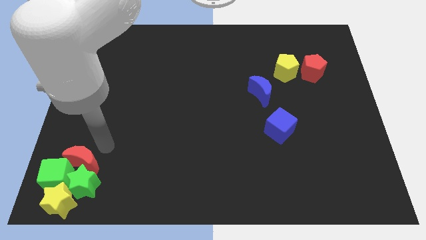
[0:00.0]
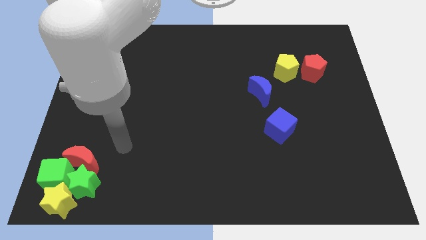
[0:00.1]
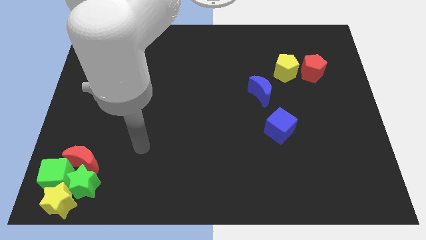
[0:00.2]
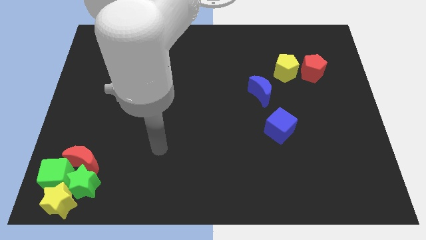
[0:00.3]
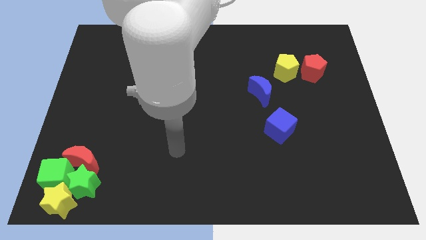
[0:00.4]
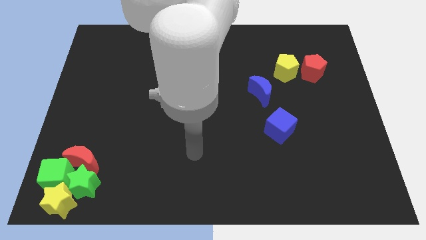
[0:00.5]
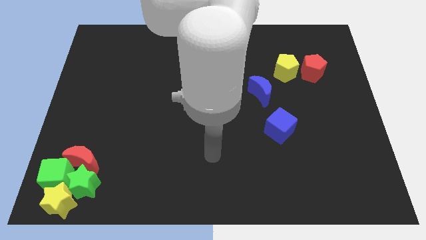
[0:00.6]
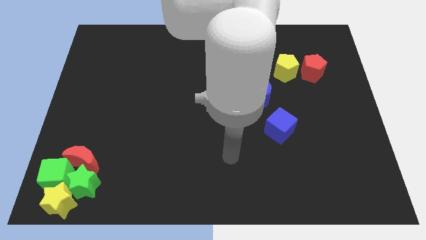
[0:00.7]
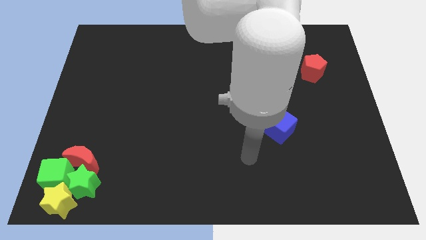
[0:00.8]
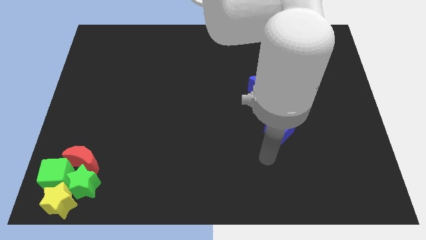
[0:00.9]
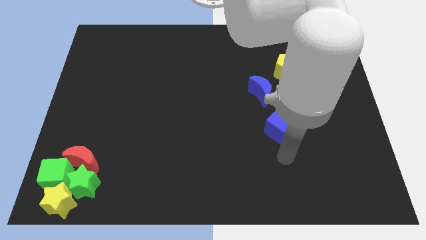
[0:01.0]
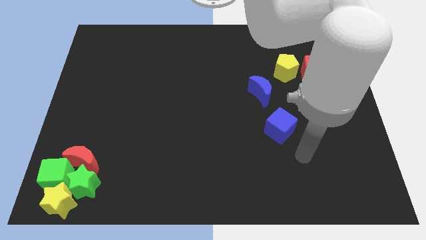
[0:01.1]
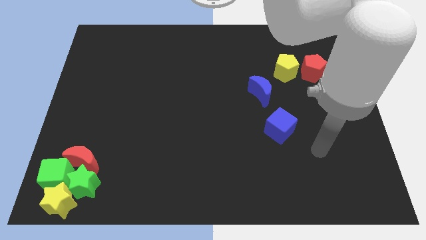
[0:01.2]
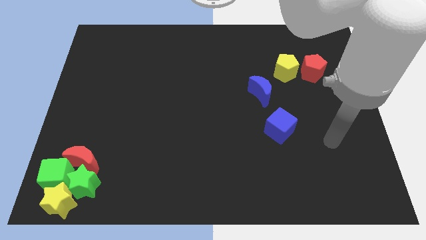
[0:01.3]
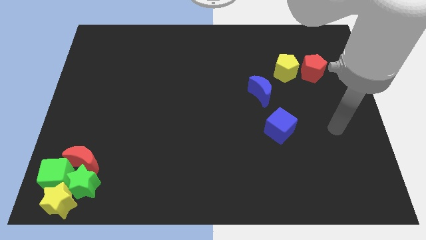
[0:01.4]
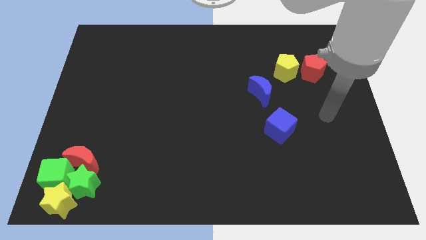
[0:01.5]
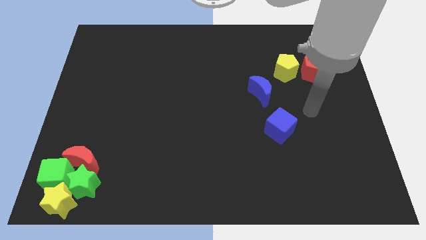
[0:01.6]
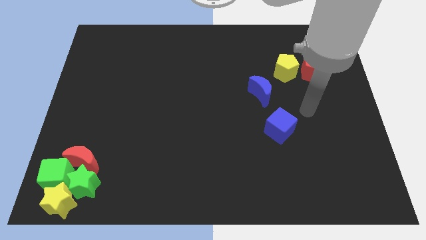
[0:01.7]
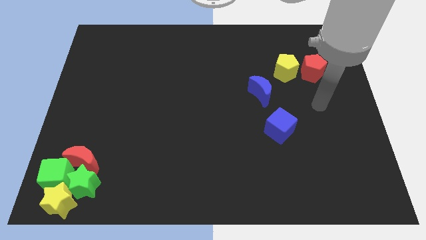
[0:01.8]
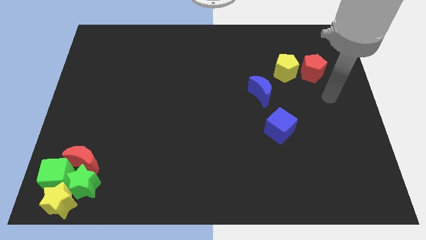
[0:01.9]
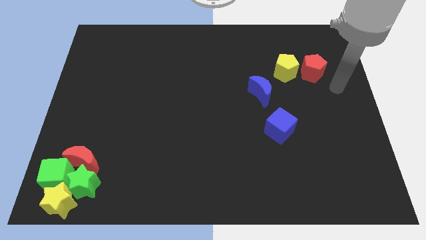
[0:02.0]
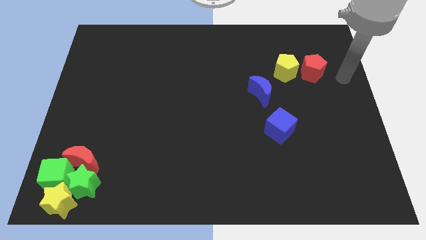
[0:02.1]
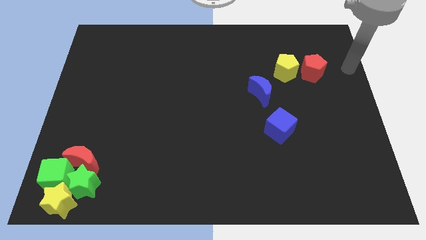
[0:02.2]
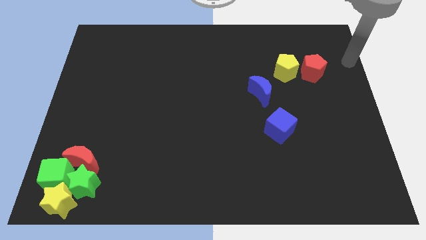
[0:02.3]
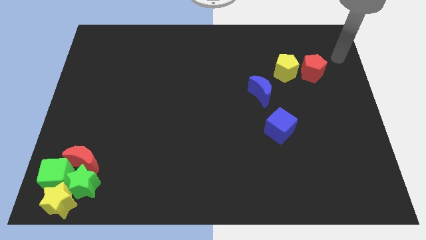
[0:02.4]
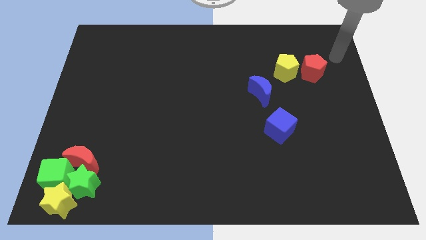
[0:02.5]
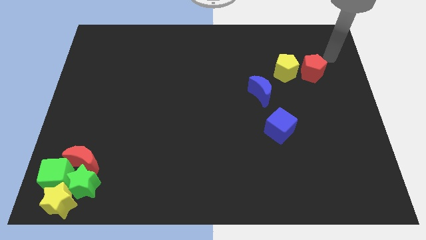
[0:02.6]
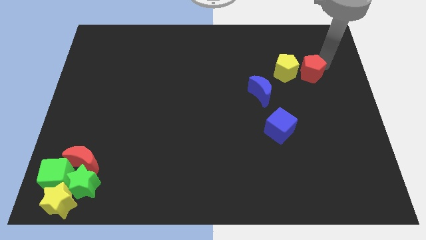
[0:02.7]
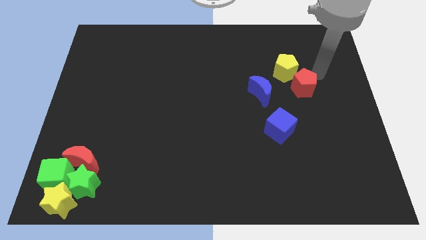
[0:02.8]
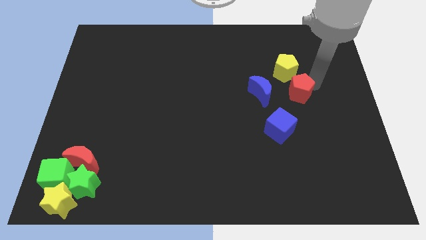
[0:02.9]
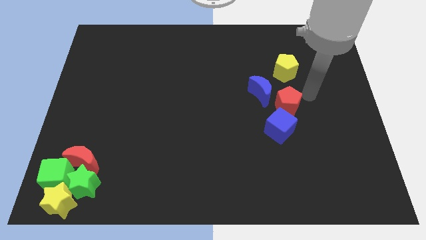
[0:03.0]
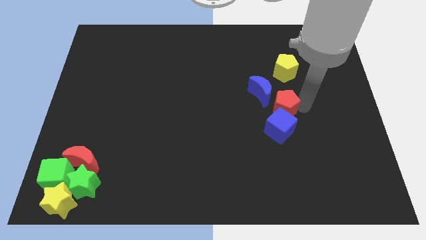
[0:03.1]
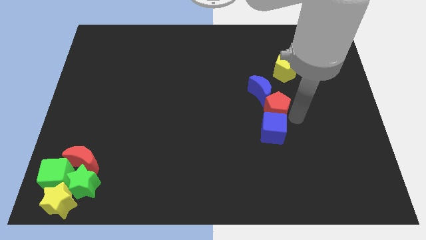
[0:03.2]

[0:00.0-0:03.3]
slide the red pentagon above the blue cube

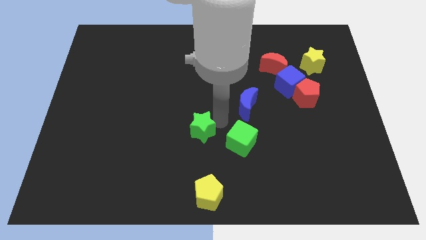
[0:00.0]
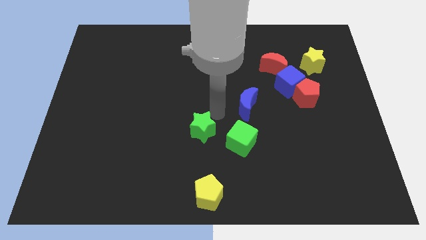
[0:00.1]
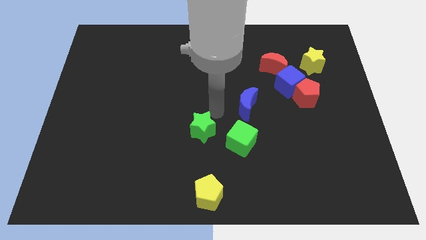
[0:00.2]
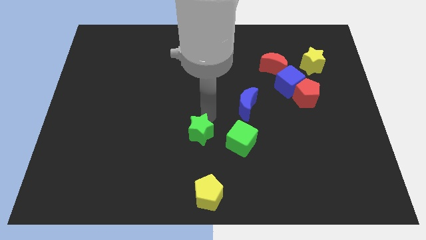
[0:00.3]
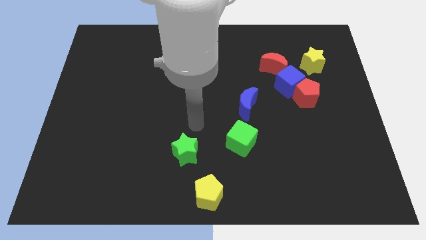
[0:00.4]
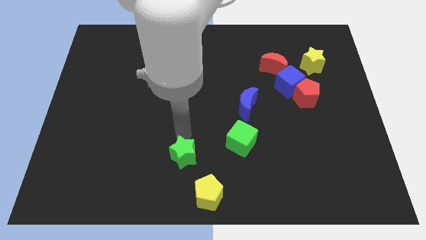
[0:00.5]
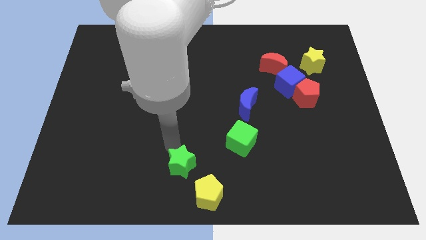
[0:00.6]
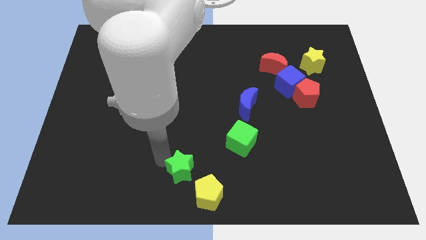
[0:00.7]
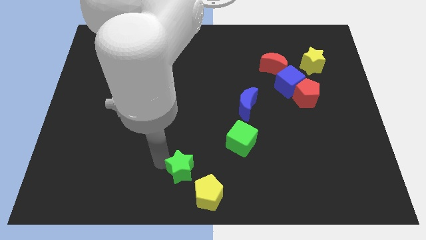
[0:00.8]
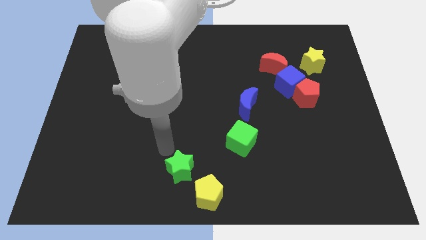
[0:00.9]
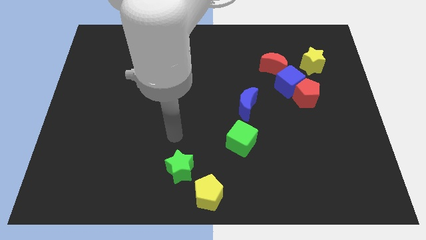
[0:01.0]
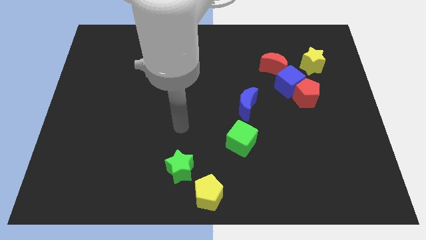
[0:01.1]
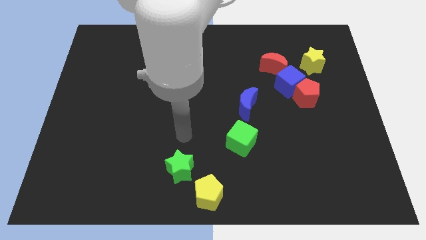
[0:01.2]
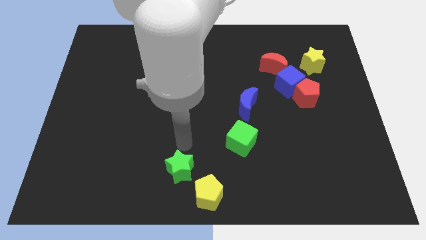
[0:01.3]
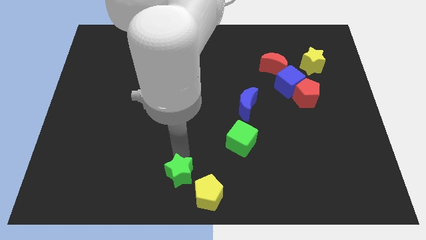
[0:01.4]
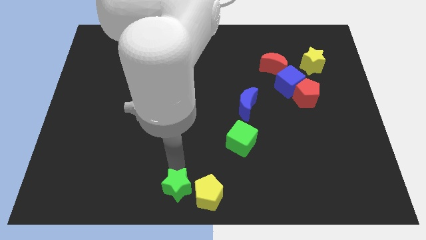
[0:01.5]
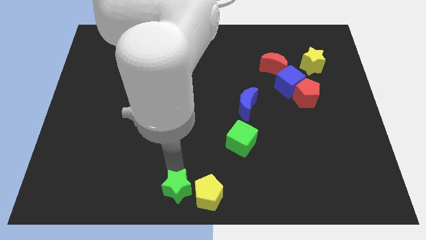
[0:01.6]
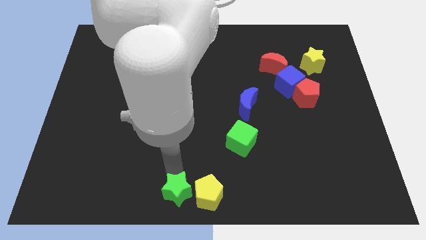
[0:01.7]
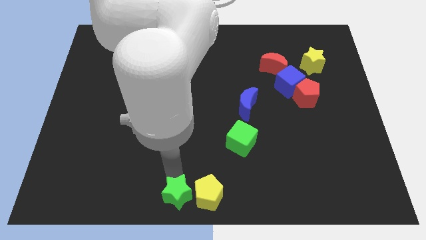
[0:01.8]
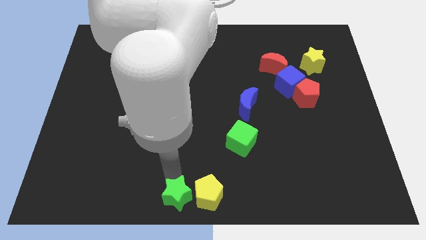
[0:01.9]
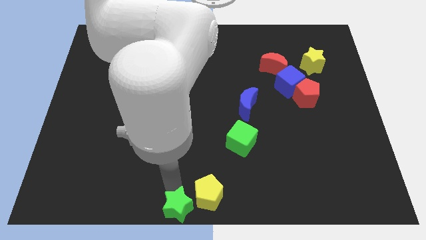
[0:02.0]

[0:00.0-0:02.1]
push the green star to the left of the yellow pentagon

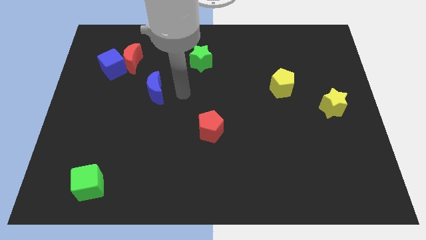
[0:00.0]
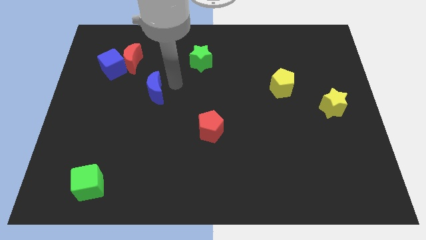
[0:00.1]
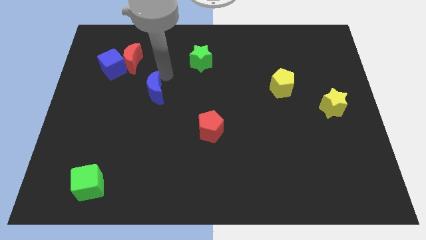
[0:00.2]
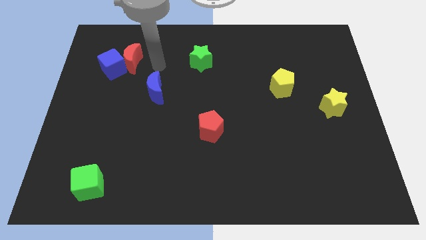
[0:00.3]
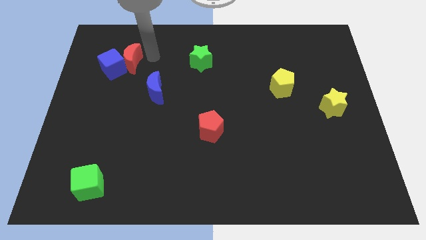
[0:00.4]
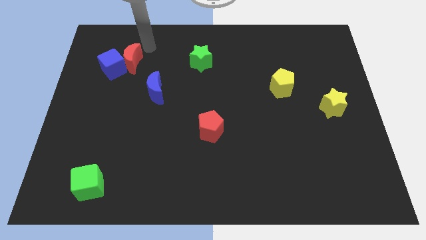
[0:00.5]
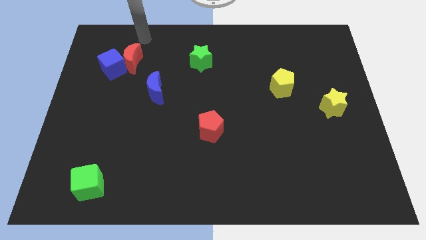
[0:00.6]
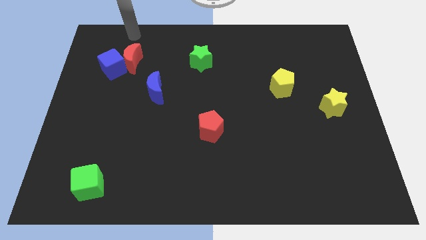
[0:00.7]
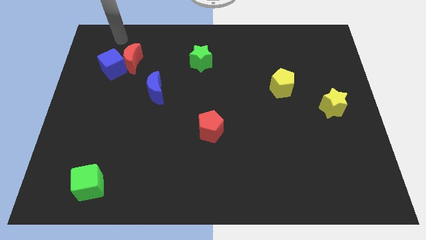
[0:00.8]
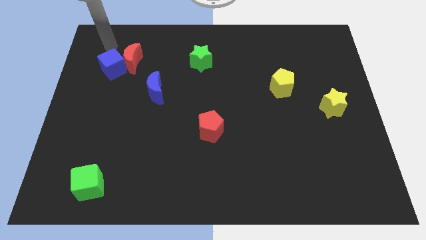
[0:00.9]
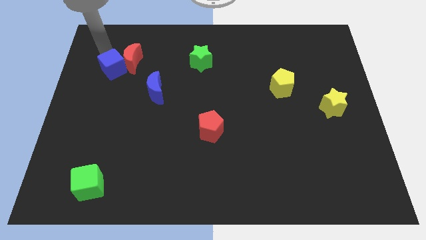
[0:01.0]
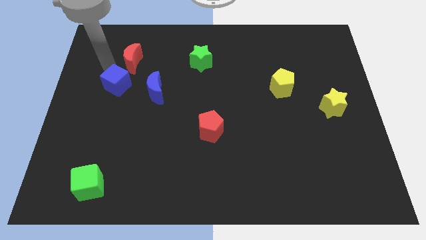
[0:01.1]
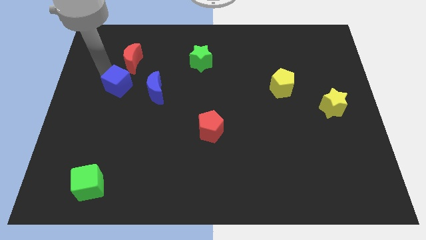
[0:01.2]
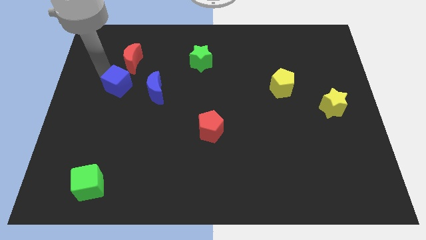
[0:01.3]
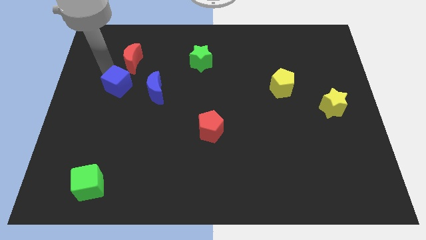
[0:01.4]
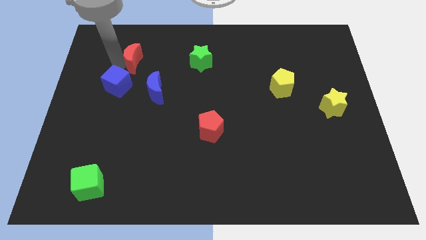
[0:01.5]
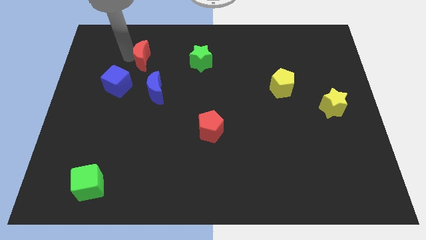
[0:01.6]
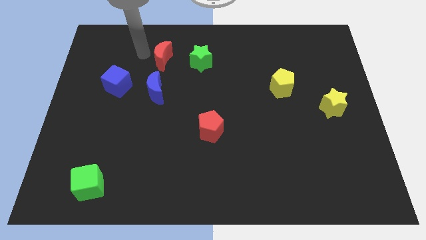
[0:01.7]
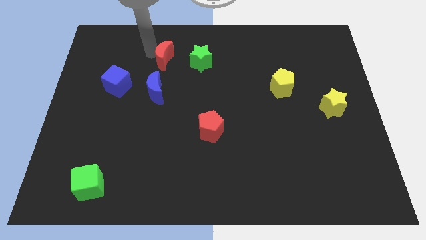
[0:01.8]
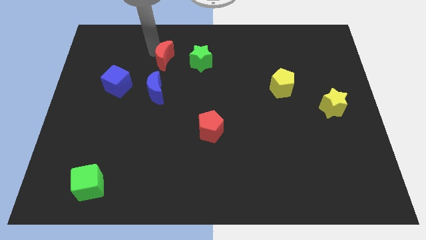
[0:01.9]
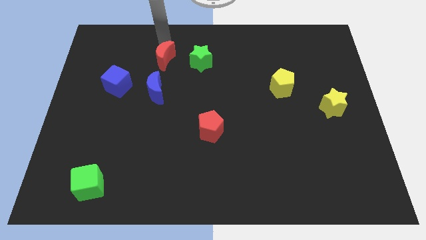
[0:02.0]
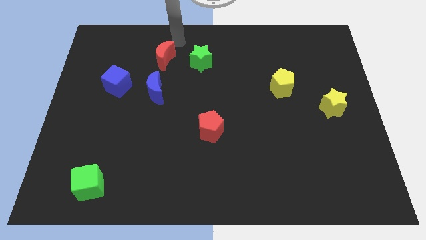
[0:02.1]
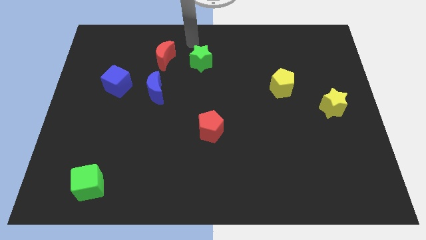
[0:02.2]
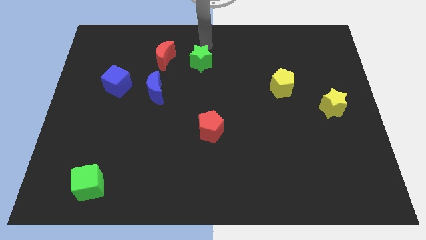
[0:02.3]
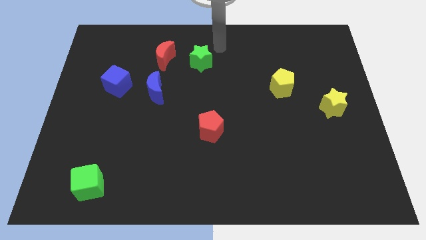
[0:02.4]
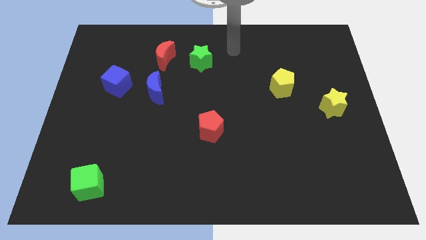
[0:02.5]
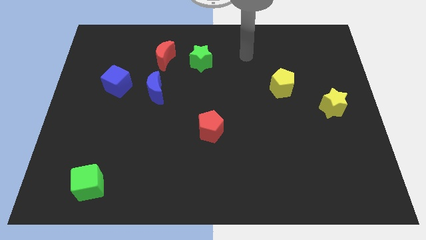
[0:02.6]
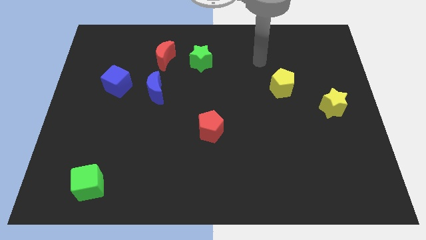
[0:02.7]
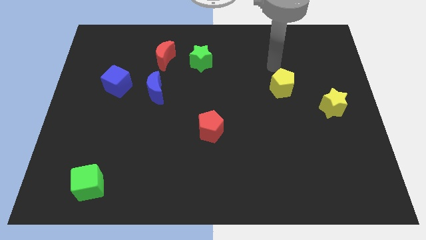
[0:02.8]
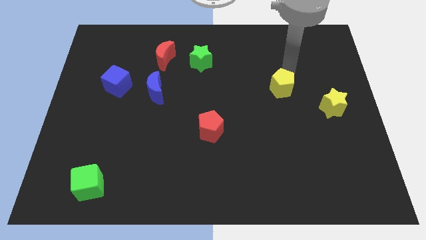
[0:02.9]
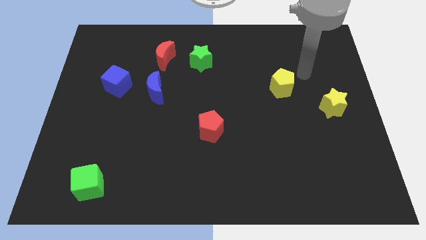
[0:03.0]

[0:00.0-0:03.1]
place the red crescent above the blue crescent

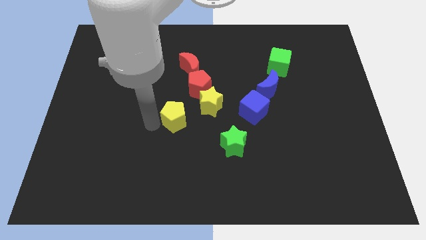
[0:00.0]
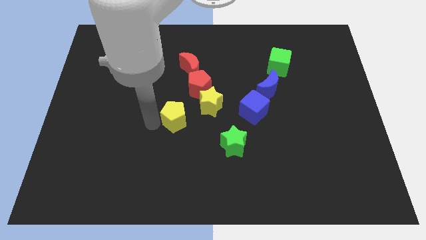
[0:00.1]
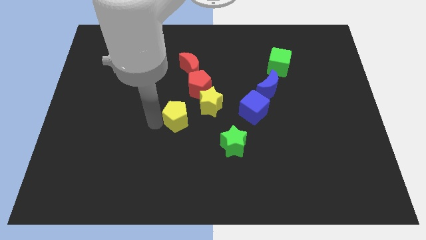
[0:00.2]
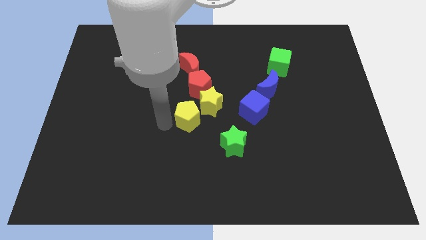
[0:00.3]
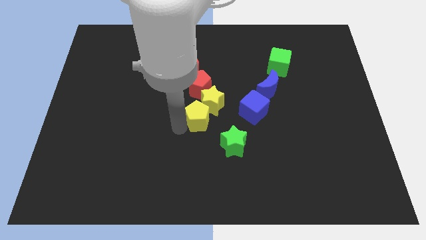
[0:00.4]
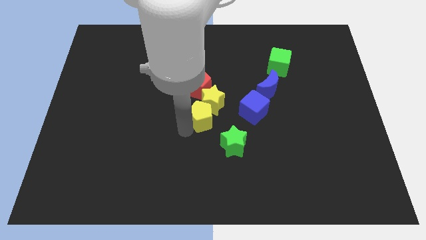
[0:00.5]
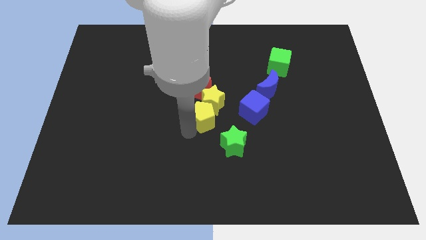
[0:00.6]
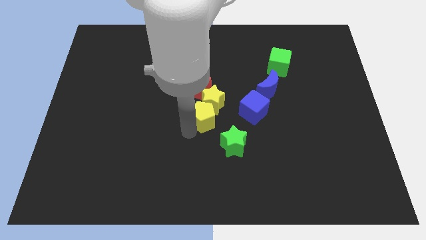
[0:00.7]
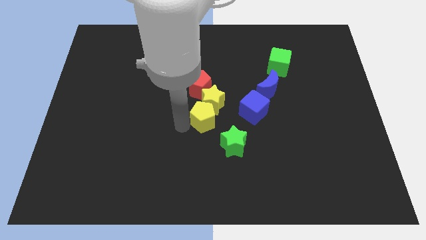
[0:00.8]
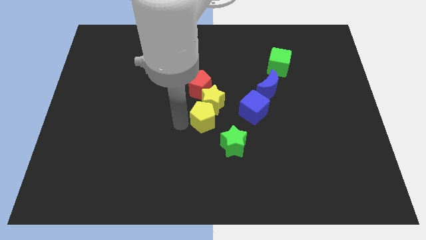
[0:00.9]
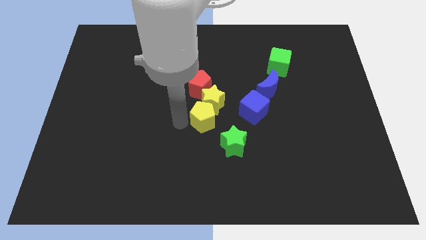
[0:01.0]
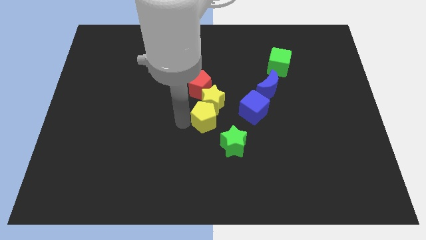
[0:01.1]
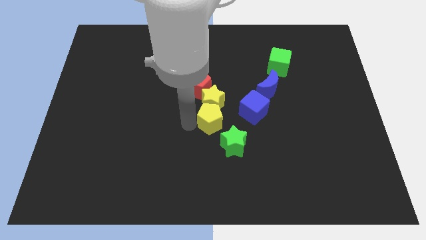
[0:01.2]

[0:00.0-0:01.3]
place yellow pentagon close to the yellow star
